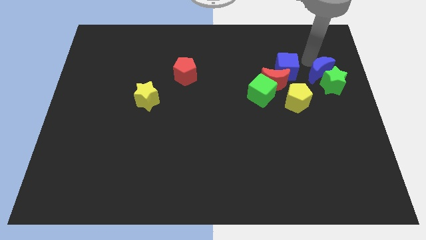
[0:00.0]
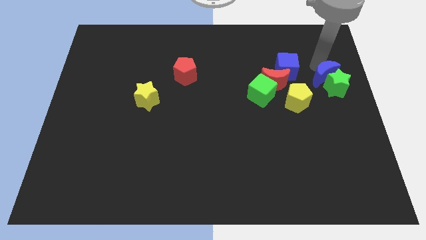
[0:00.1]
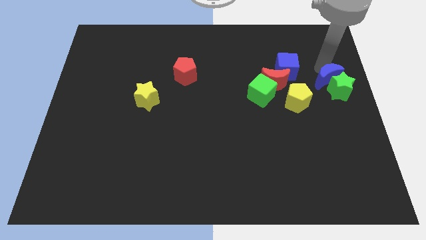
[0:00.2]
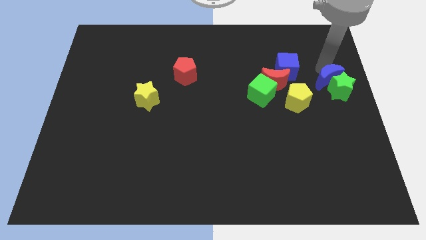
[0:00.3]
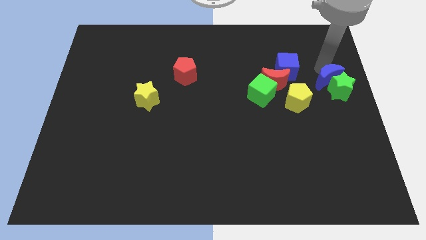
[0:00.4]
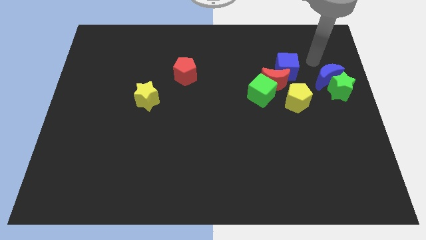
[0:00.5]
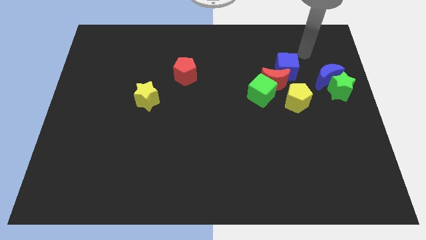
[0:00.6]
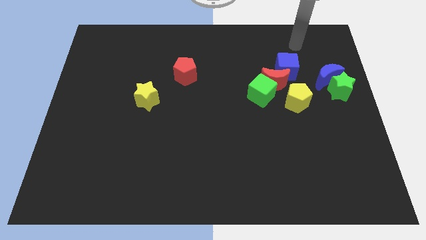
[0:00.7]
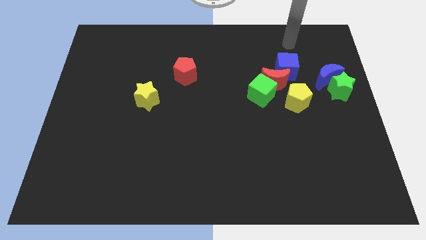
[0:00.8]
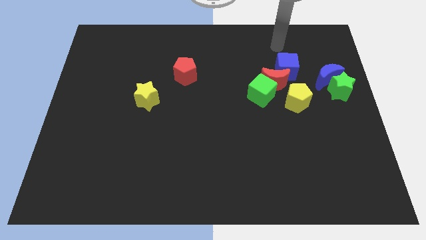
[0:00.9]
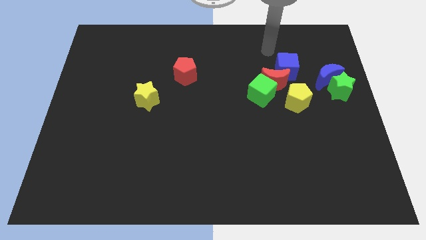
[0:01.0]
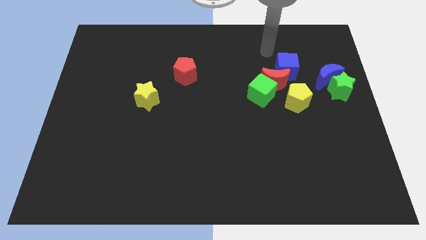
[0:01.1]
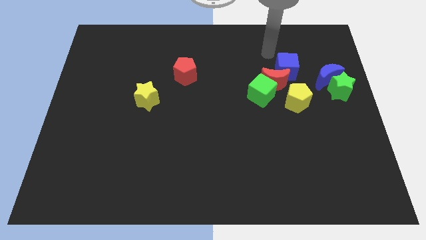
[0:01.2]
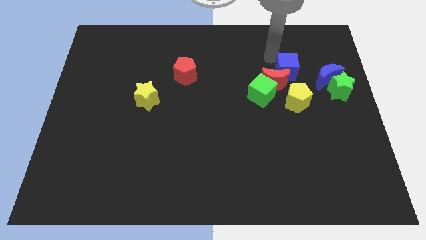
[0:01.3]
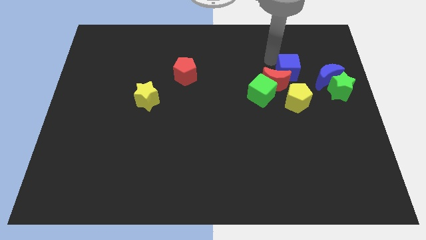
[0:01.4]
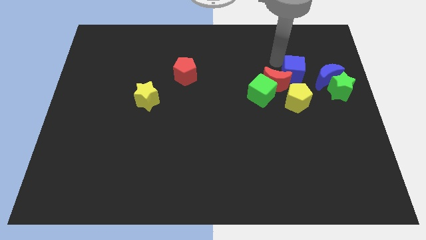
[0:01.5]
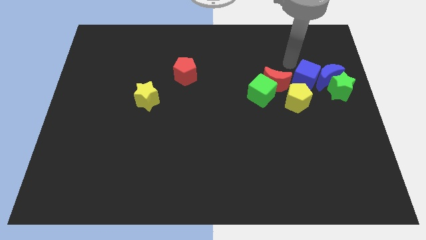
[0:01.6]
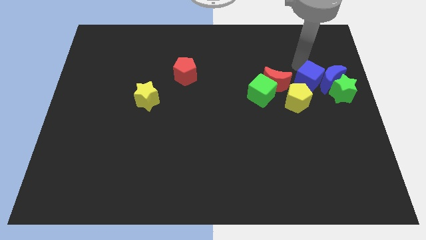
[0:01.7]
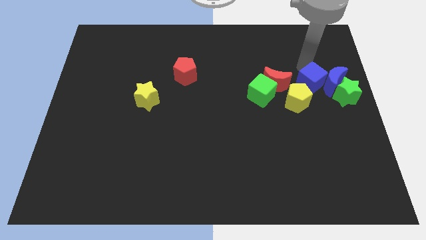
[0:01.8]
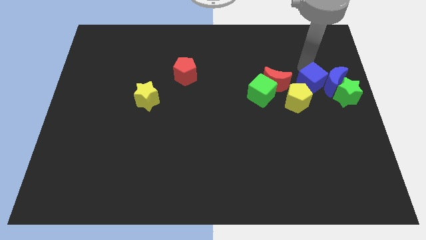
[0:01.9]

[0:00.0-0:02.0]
separate the blue cube from red moon

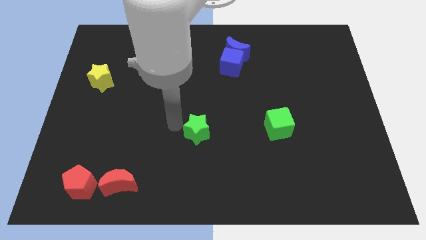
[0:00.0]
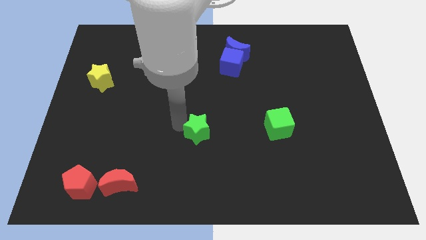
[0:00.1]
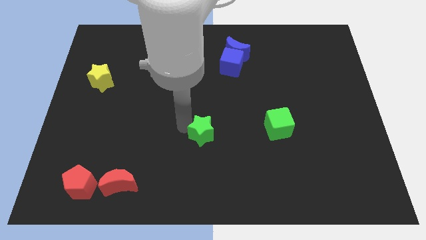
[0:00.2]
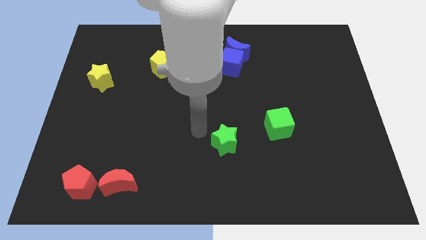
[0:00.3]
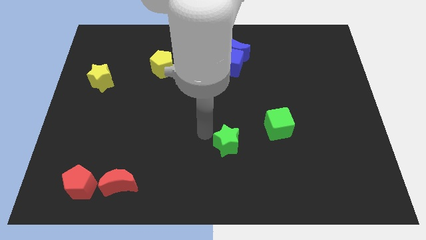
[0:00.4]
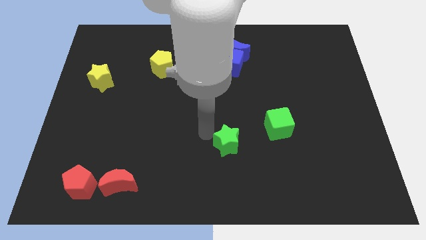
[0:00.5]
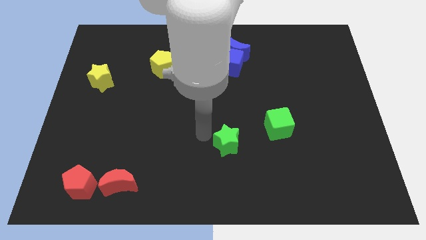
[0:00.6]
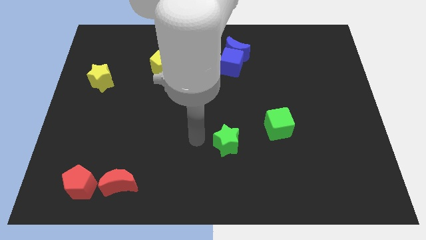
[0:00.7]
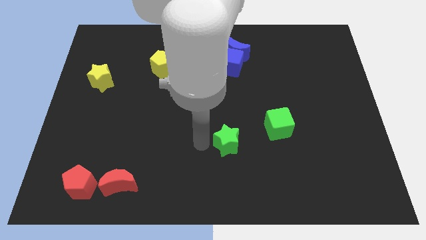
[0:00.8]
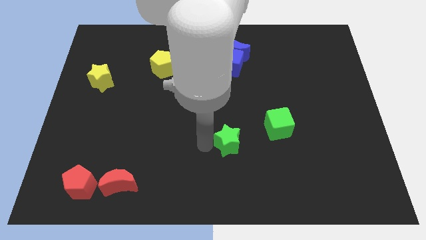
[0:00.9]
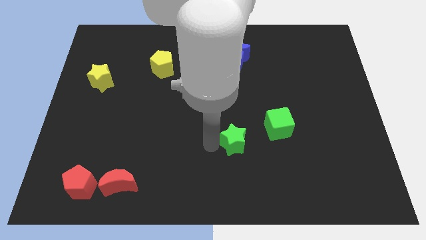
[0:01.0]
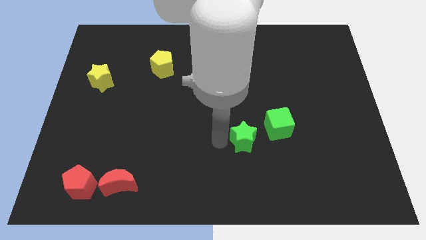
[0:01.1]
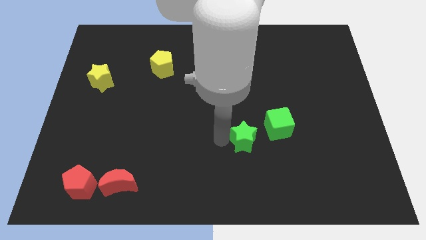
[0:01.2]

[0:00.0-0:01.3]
push the green star to the left of the green cube

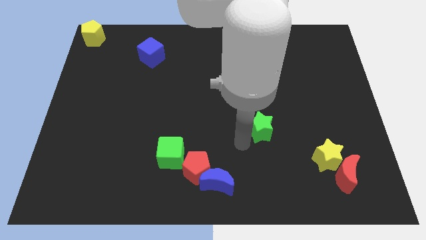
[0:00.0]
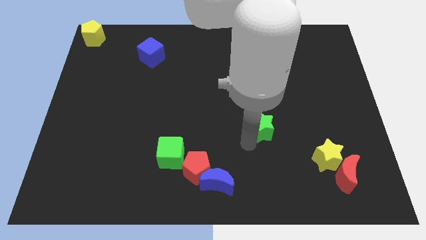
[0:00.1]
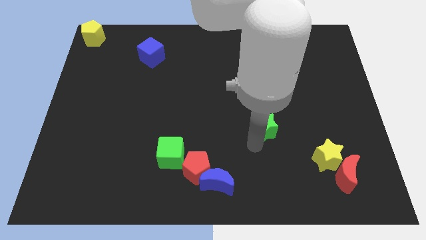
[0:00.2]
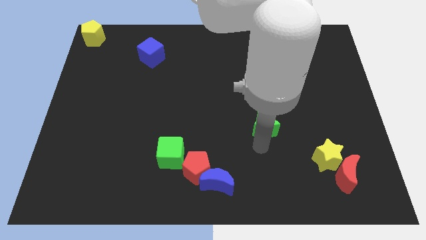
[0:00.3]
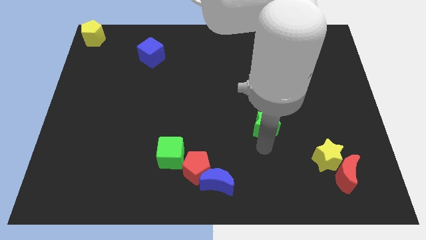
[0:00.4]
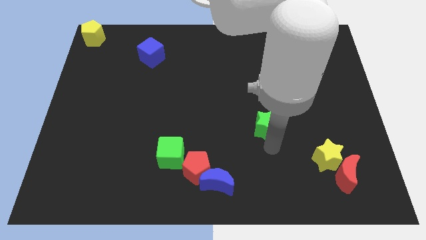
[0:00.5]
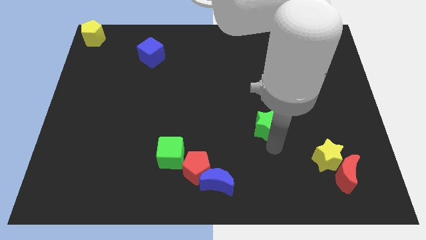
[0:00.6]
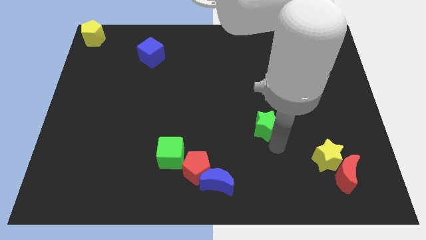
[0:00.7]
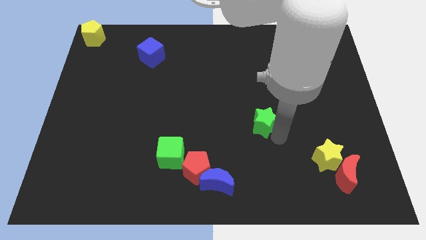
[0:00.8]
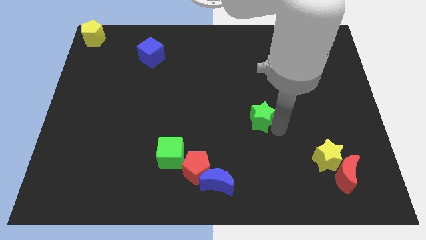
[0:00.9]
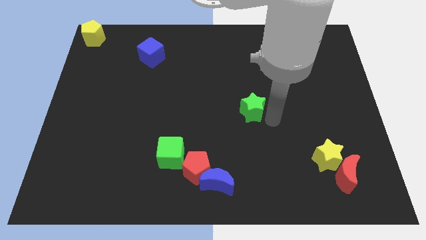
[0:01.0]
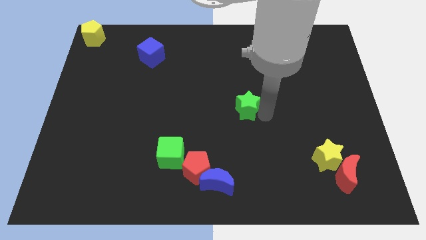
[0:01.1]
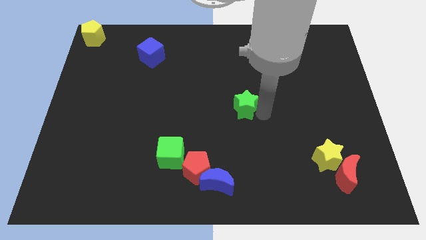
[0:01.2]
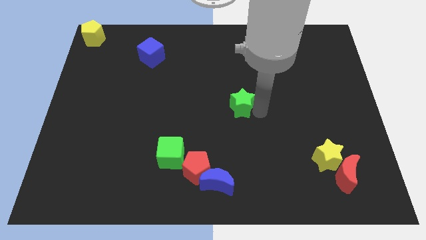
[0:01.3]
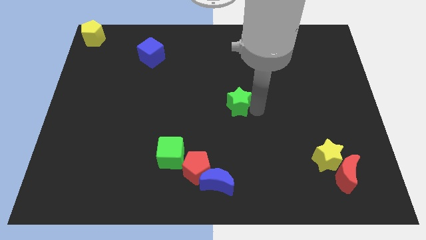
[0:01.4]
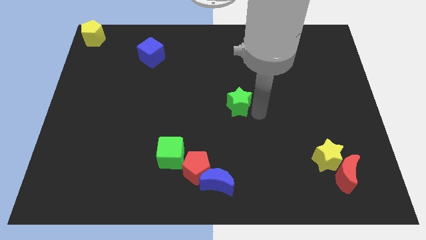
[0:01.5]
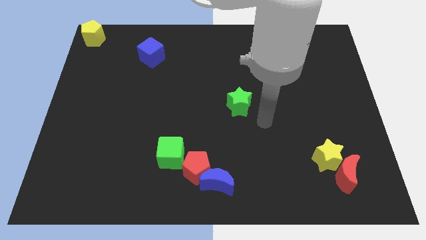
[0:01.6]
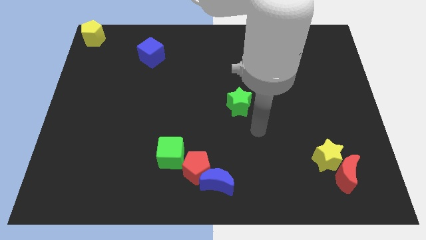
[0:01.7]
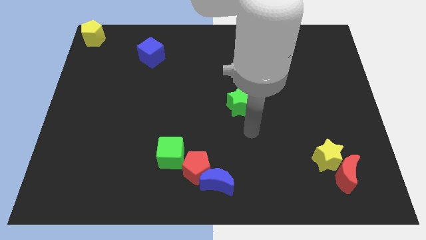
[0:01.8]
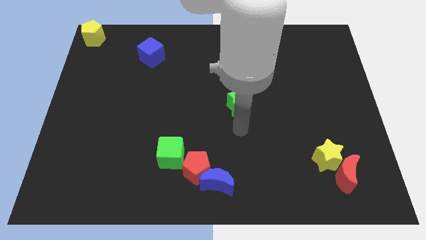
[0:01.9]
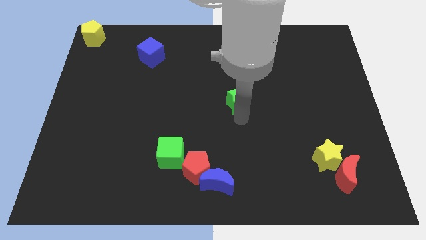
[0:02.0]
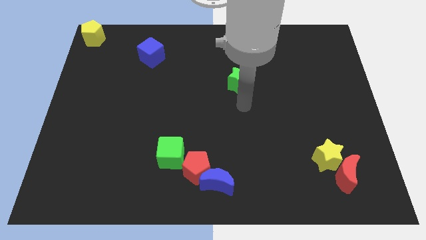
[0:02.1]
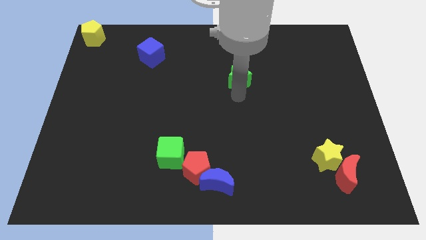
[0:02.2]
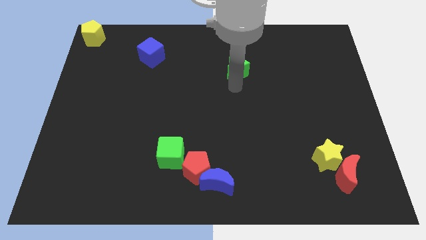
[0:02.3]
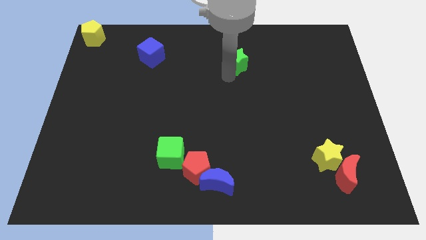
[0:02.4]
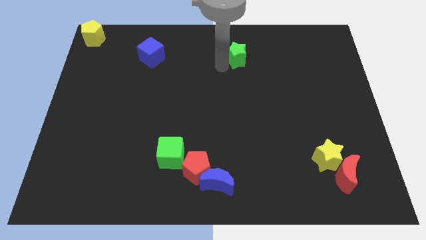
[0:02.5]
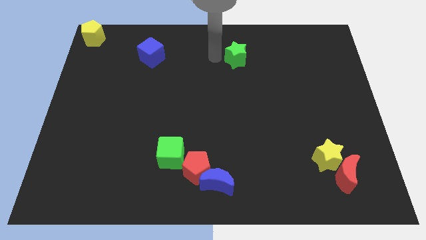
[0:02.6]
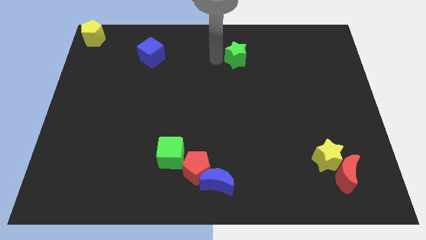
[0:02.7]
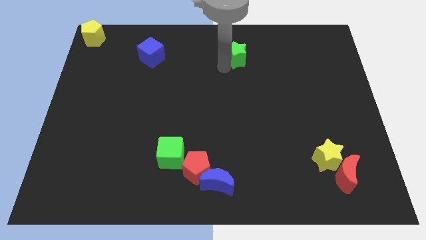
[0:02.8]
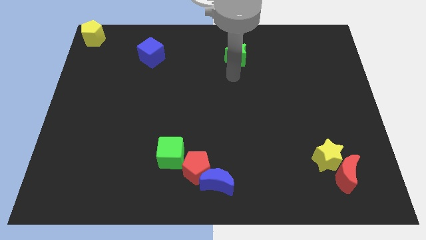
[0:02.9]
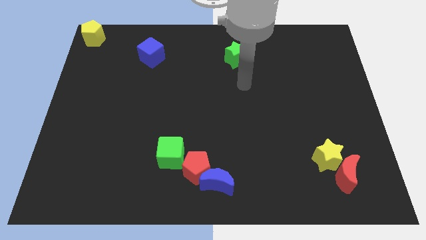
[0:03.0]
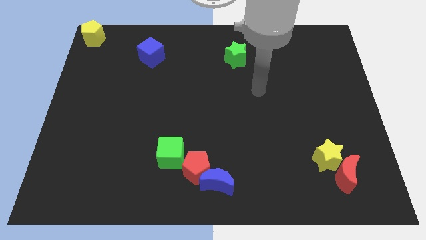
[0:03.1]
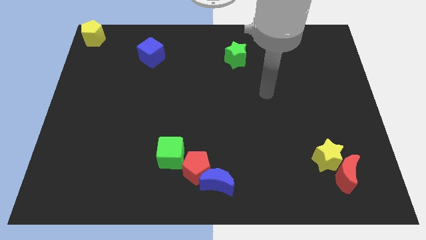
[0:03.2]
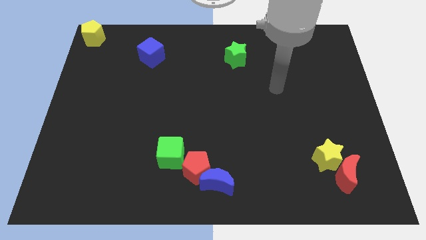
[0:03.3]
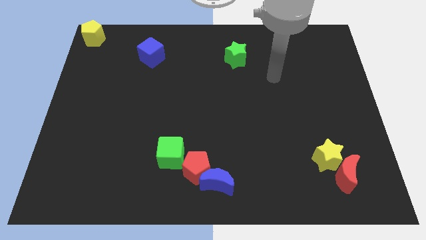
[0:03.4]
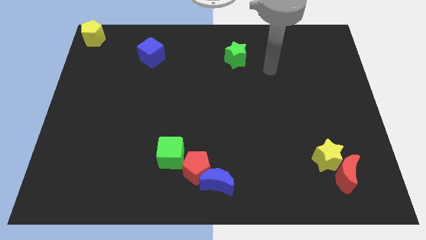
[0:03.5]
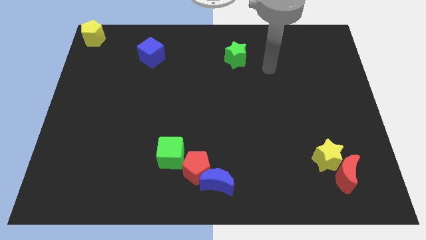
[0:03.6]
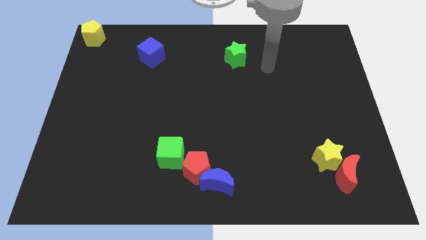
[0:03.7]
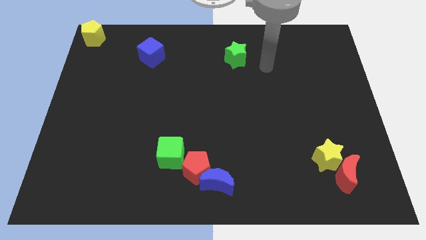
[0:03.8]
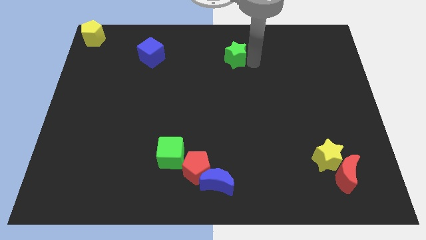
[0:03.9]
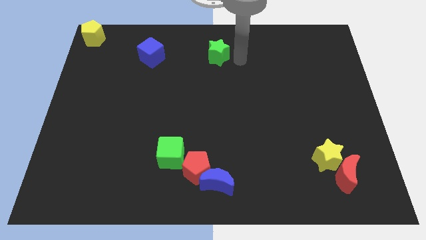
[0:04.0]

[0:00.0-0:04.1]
push green star towards top center

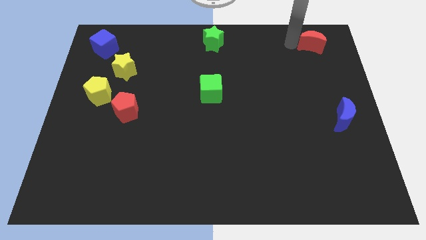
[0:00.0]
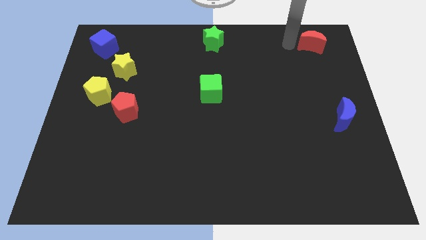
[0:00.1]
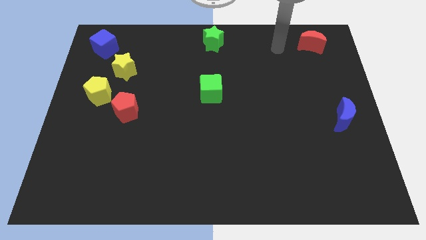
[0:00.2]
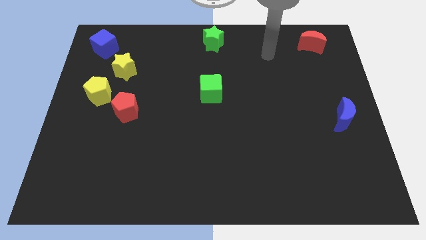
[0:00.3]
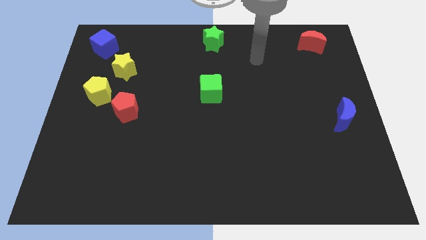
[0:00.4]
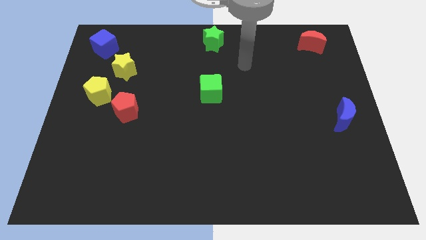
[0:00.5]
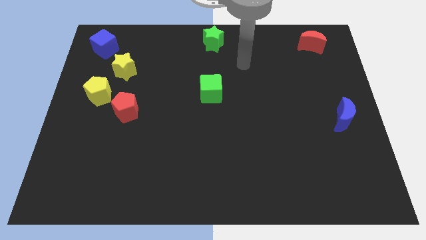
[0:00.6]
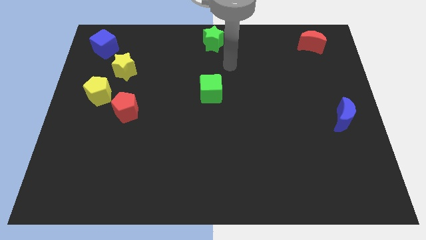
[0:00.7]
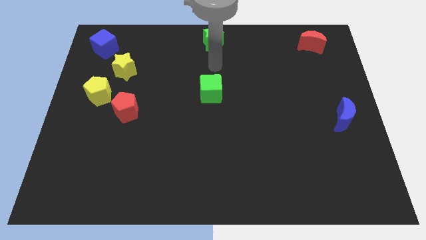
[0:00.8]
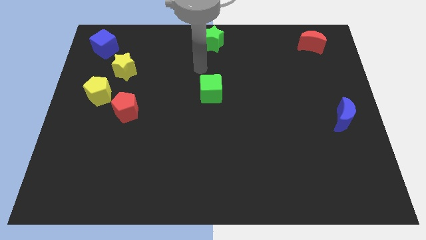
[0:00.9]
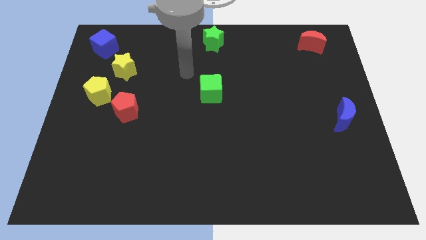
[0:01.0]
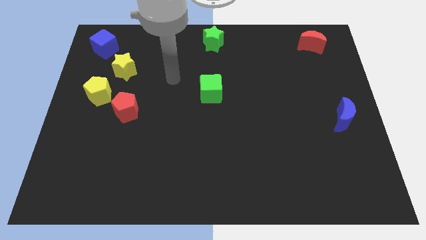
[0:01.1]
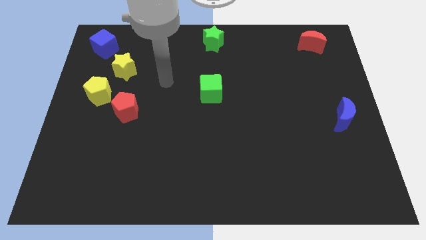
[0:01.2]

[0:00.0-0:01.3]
move your arm away from red crescent

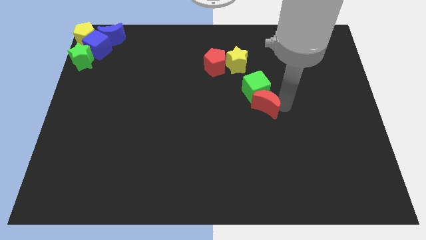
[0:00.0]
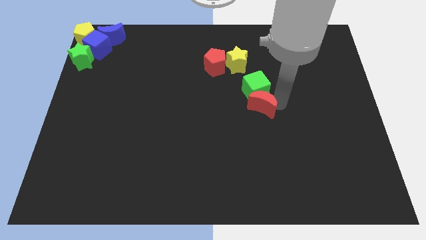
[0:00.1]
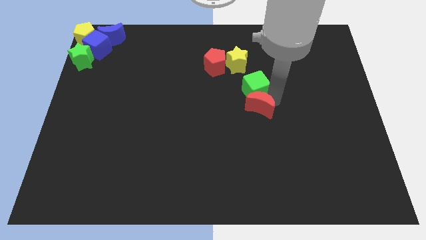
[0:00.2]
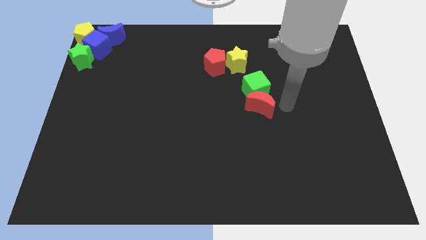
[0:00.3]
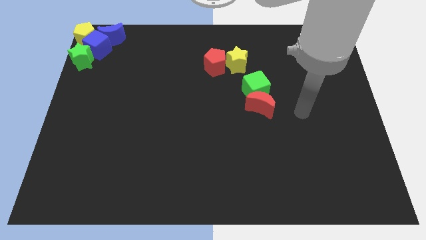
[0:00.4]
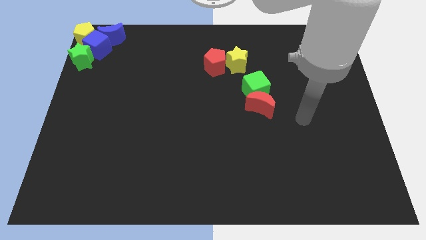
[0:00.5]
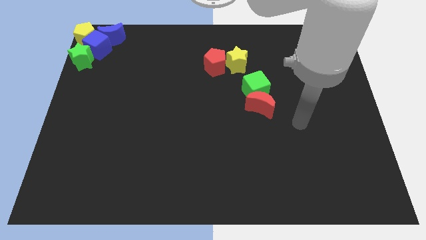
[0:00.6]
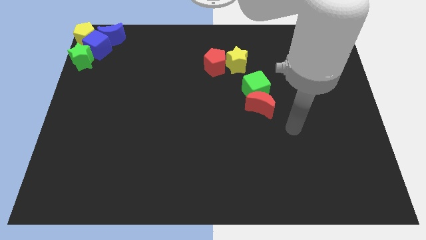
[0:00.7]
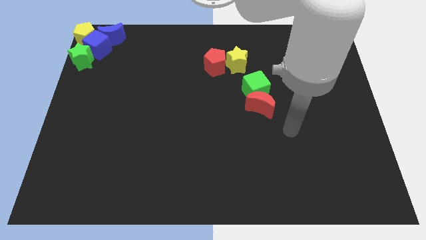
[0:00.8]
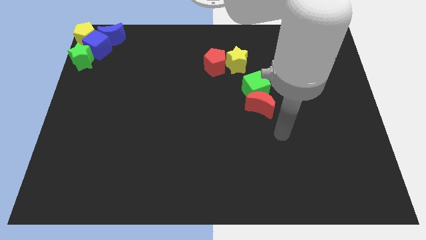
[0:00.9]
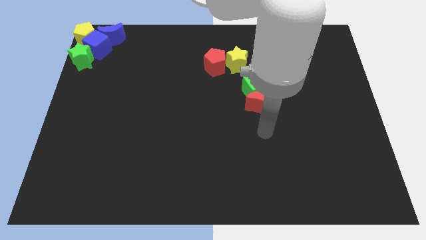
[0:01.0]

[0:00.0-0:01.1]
place the red crescent below the green cube
